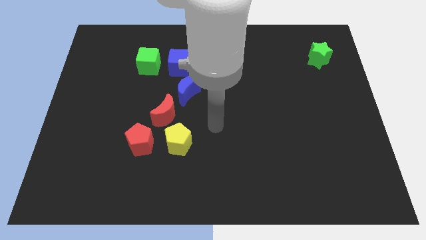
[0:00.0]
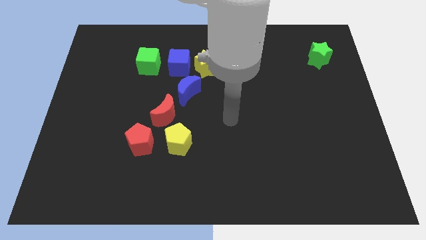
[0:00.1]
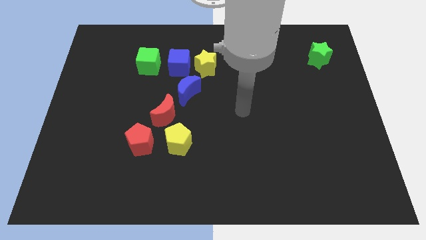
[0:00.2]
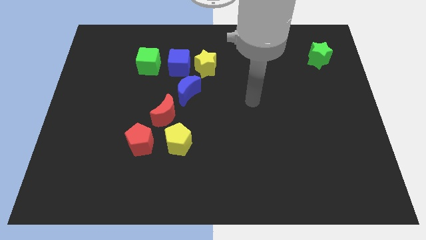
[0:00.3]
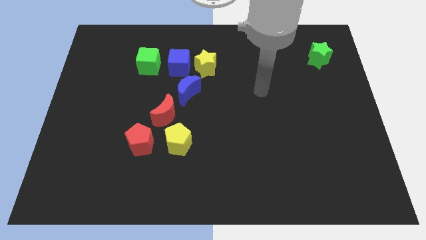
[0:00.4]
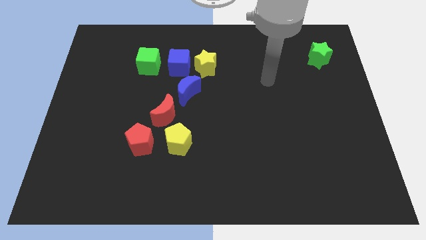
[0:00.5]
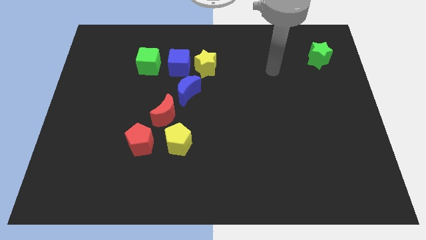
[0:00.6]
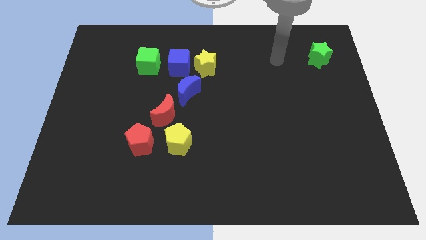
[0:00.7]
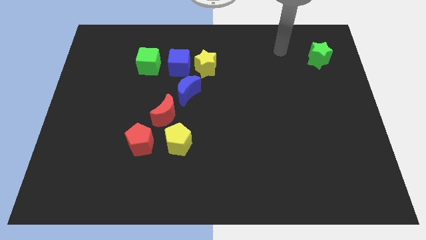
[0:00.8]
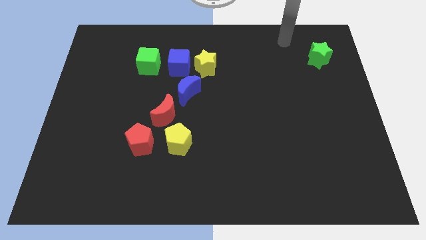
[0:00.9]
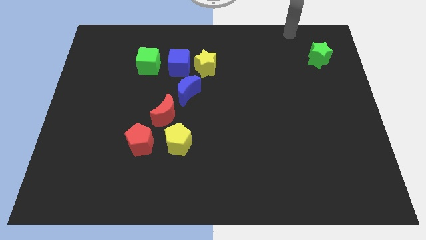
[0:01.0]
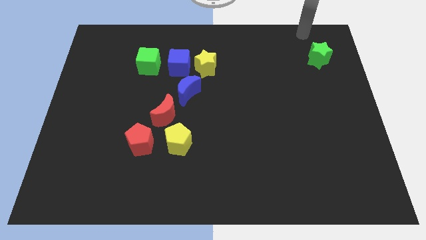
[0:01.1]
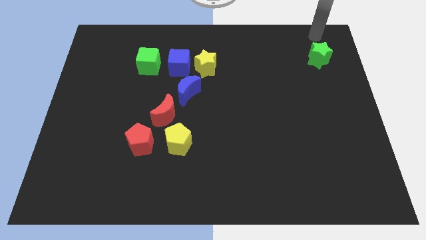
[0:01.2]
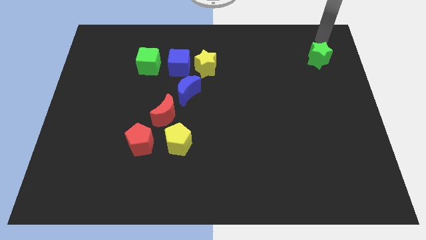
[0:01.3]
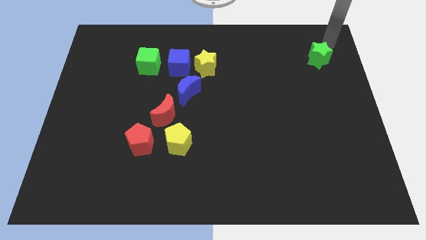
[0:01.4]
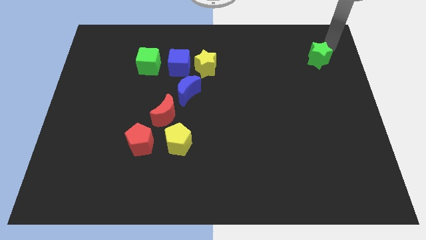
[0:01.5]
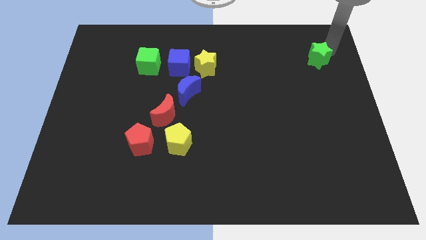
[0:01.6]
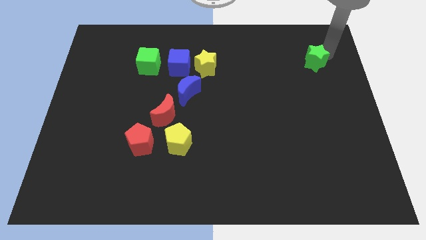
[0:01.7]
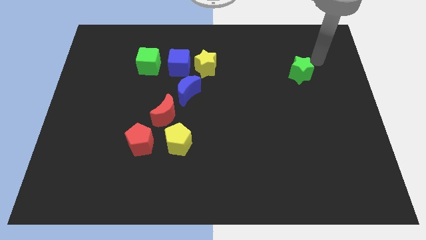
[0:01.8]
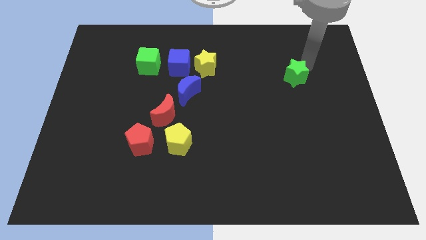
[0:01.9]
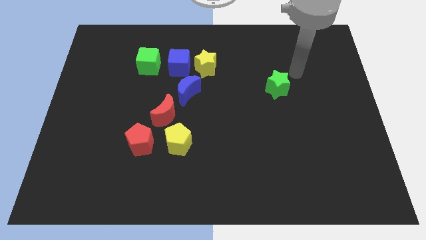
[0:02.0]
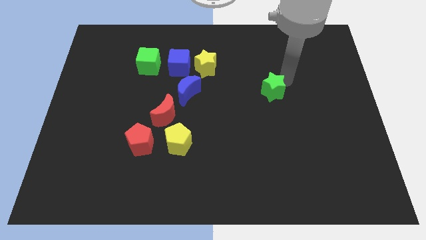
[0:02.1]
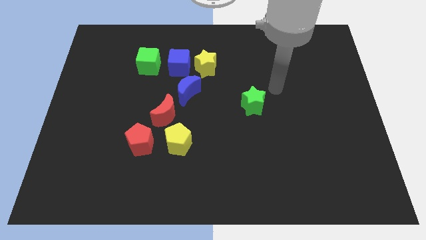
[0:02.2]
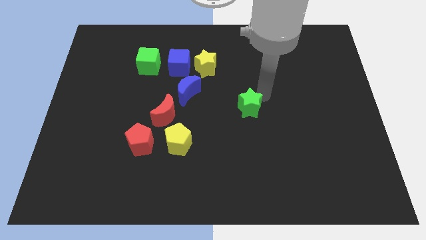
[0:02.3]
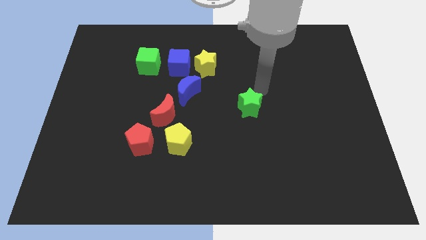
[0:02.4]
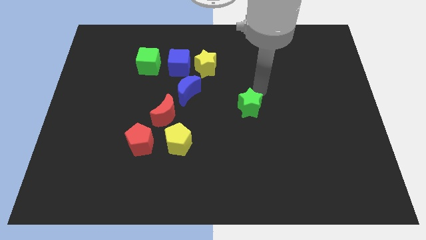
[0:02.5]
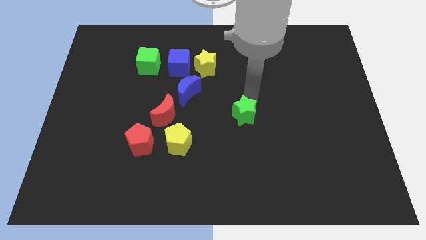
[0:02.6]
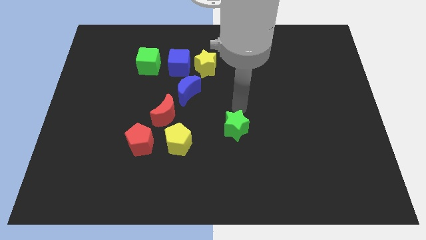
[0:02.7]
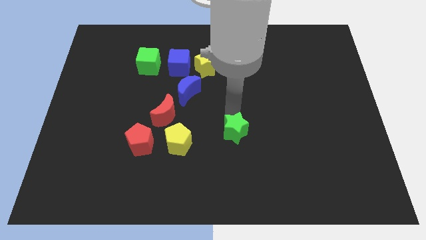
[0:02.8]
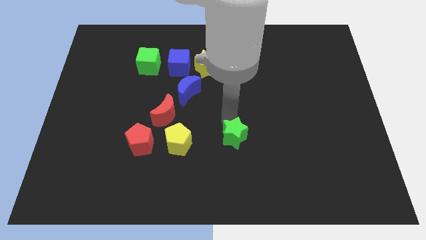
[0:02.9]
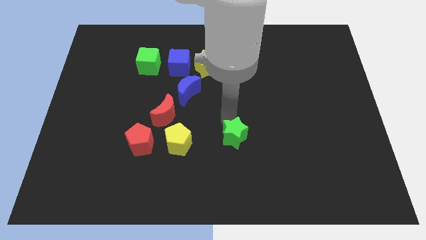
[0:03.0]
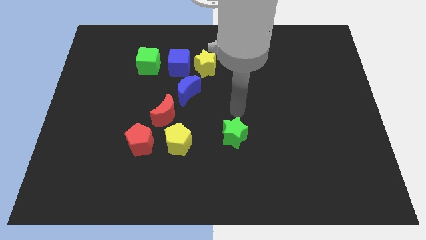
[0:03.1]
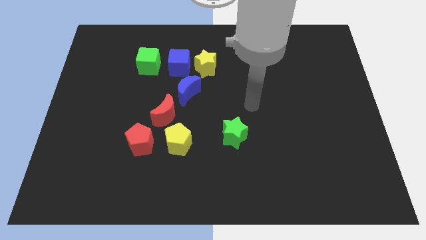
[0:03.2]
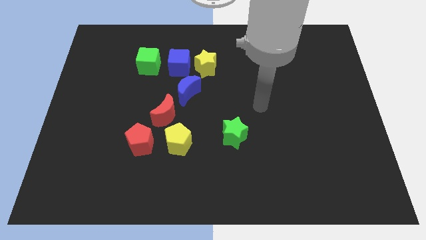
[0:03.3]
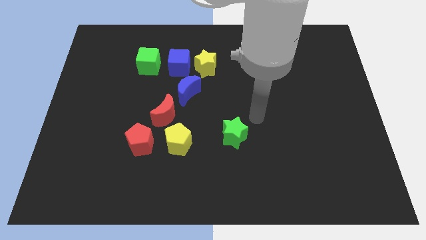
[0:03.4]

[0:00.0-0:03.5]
place the green star right to the yellow pentagon

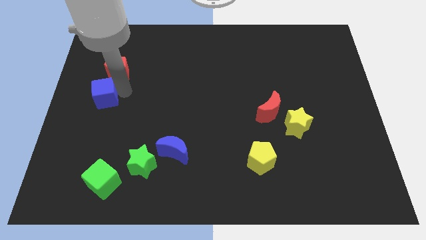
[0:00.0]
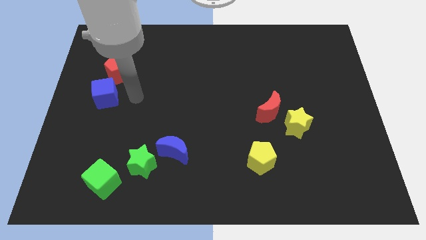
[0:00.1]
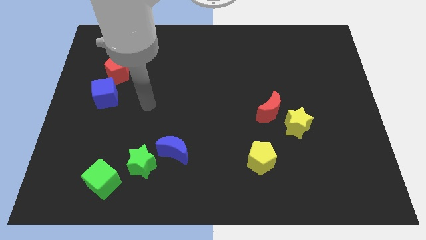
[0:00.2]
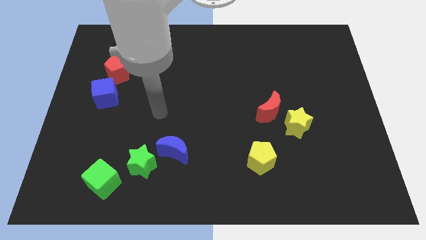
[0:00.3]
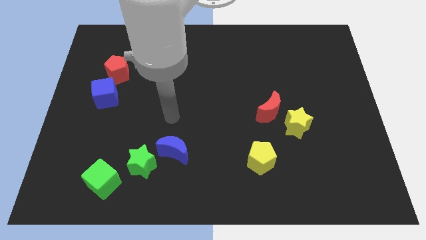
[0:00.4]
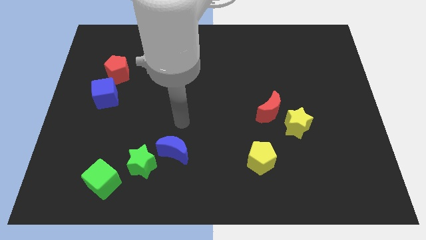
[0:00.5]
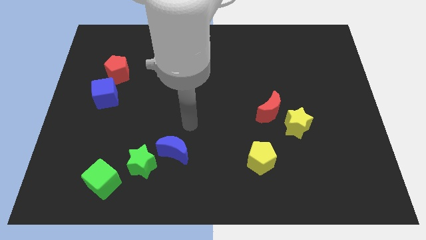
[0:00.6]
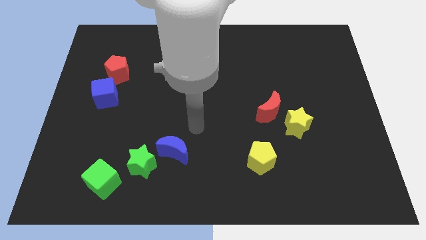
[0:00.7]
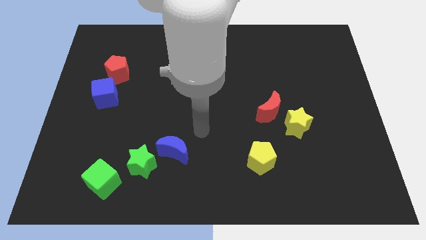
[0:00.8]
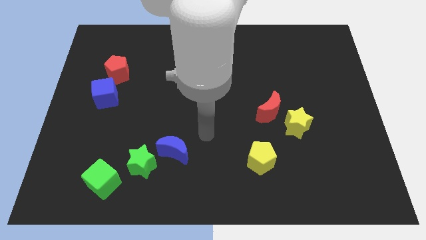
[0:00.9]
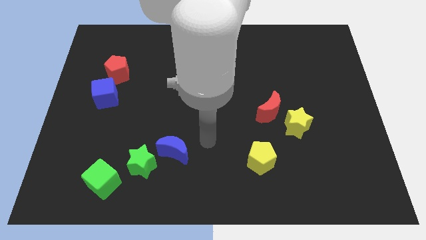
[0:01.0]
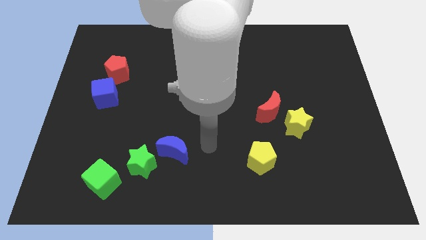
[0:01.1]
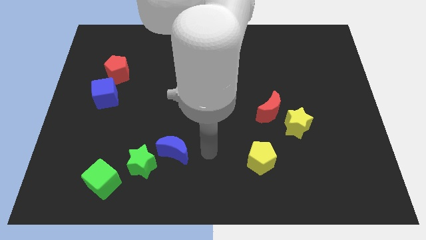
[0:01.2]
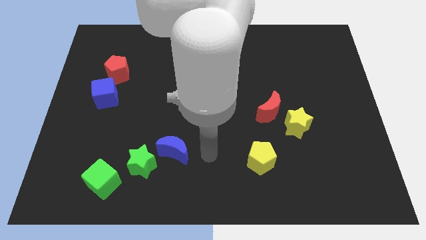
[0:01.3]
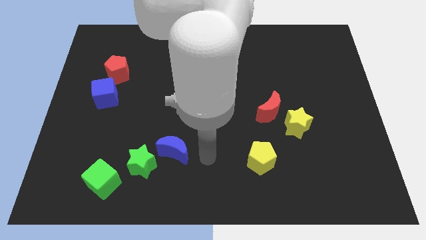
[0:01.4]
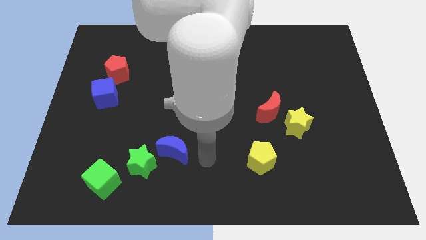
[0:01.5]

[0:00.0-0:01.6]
point your arm in between the blue moon and yellow pentagon

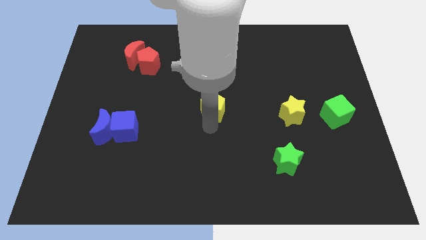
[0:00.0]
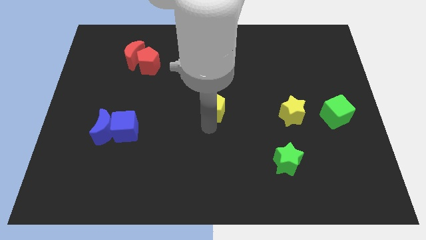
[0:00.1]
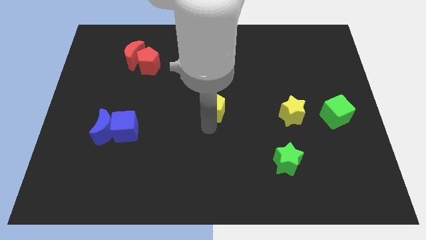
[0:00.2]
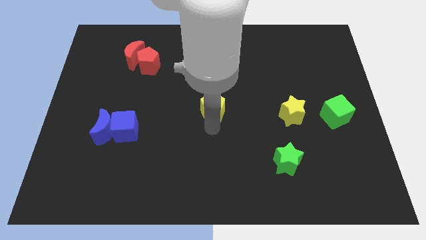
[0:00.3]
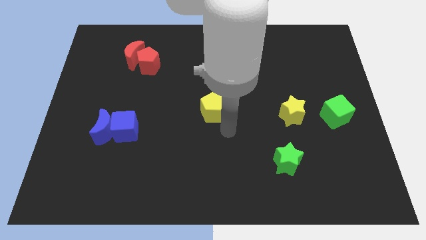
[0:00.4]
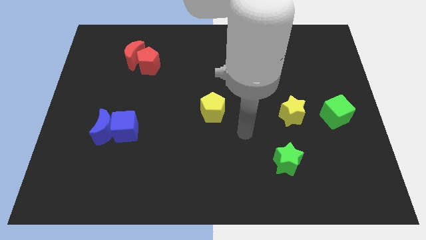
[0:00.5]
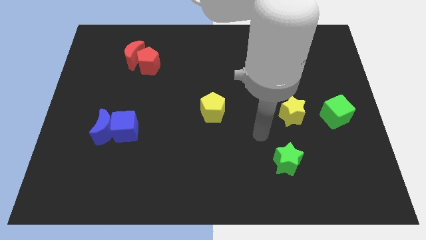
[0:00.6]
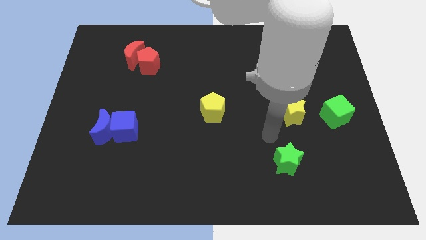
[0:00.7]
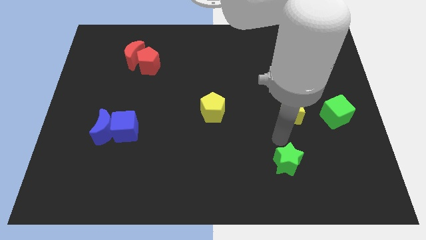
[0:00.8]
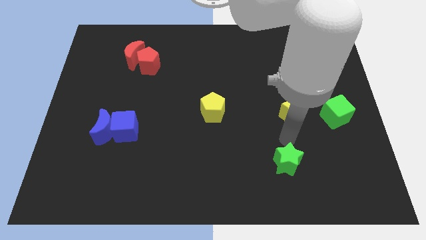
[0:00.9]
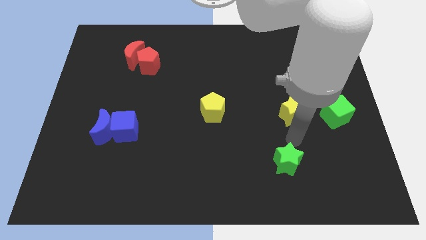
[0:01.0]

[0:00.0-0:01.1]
place the arm in between the yellow star and green star

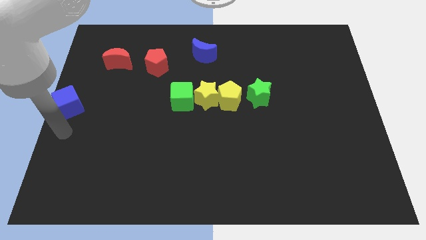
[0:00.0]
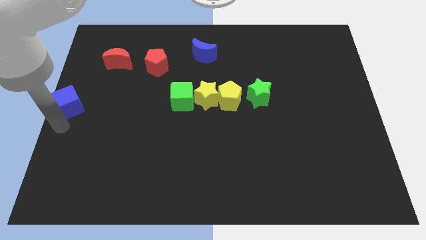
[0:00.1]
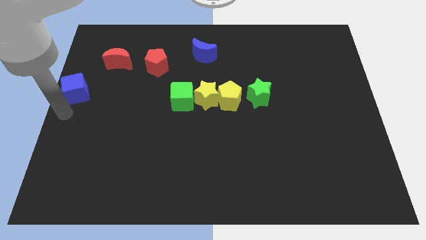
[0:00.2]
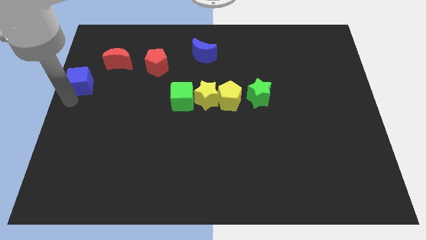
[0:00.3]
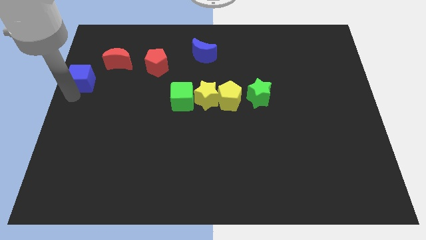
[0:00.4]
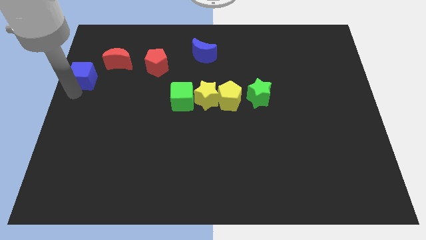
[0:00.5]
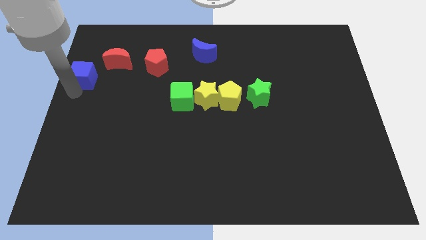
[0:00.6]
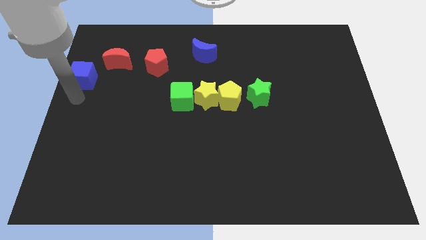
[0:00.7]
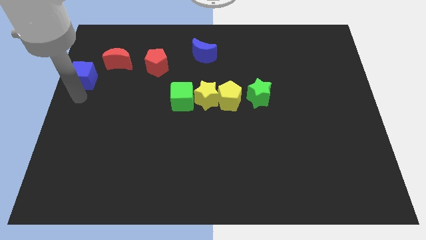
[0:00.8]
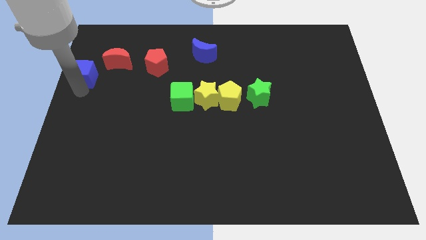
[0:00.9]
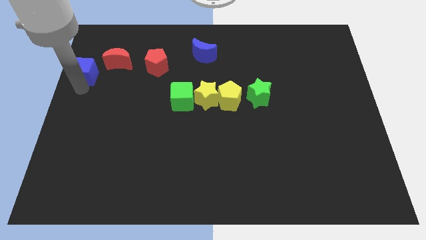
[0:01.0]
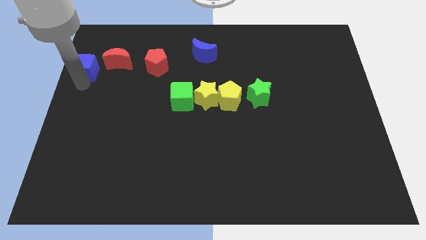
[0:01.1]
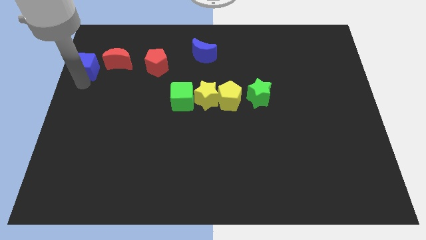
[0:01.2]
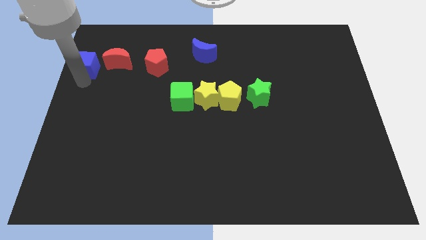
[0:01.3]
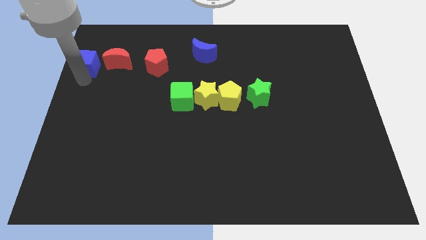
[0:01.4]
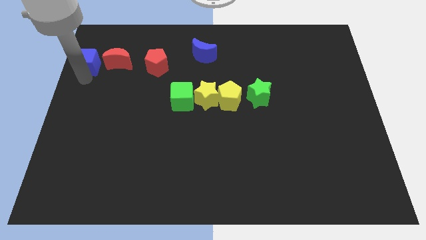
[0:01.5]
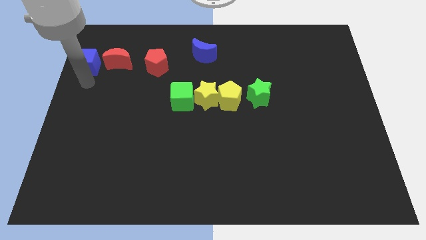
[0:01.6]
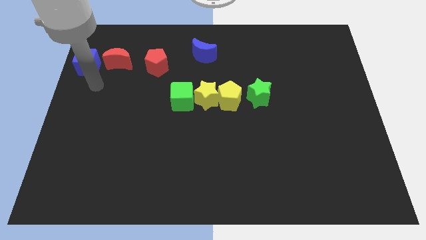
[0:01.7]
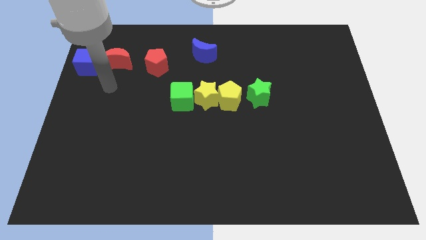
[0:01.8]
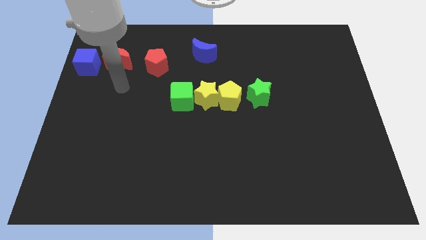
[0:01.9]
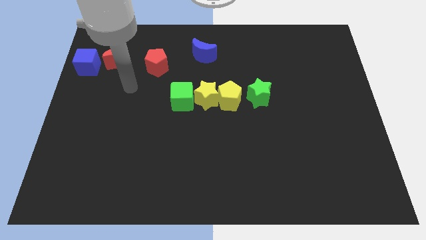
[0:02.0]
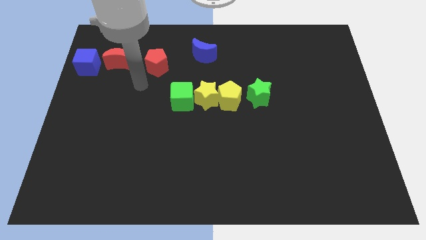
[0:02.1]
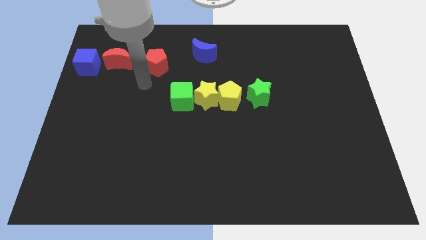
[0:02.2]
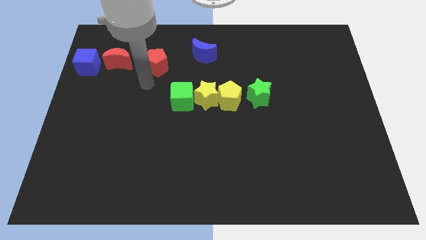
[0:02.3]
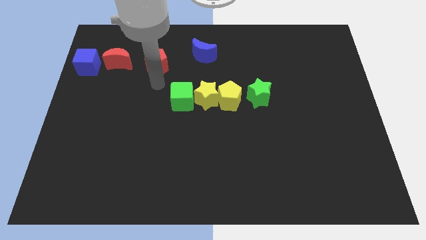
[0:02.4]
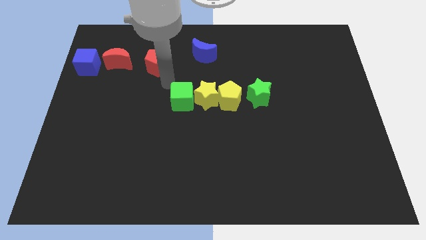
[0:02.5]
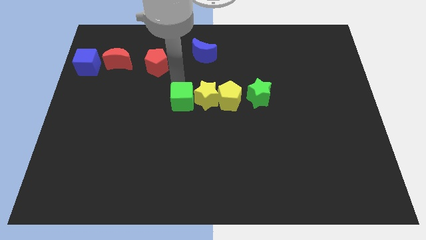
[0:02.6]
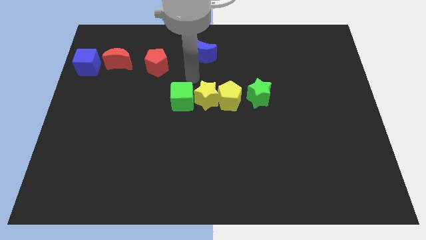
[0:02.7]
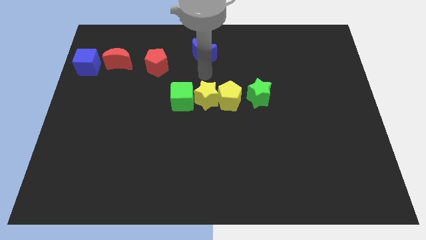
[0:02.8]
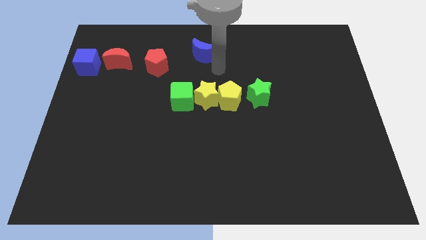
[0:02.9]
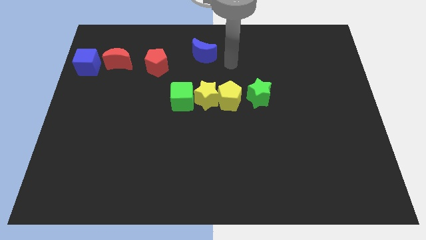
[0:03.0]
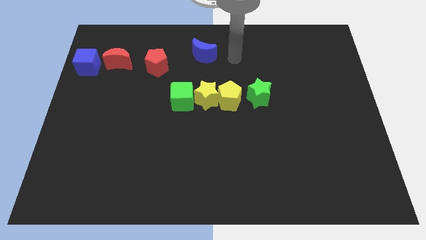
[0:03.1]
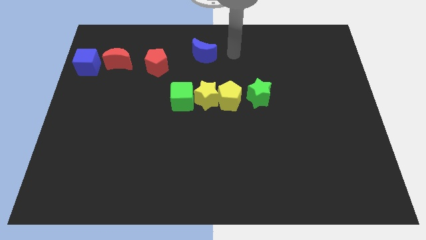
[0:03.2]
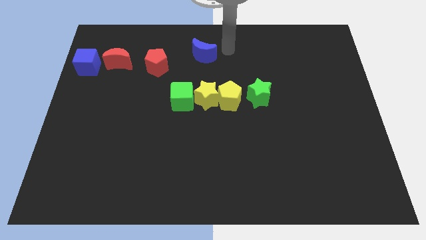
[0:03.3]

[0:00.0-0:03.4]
push the blue cube parallel left to the red moon
